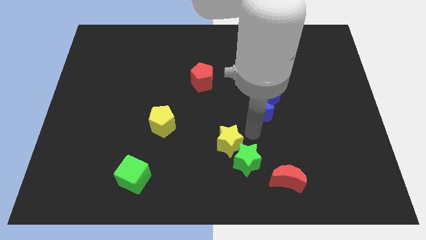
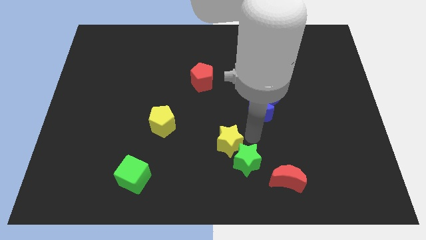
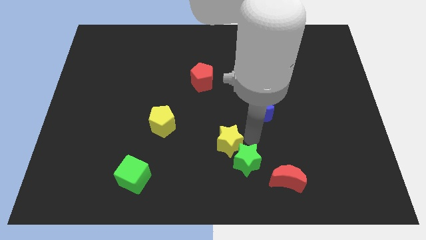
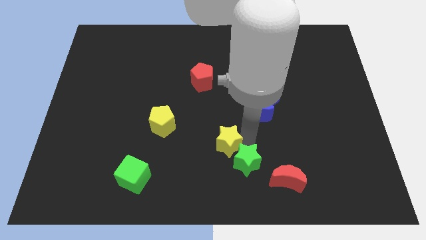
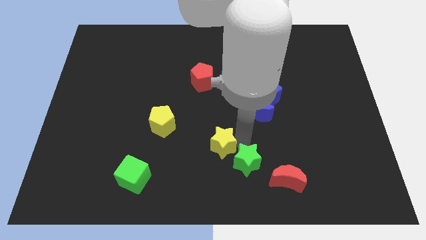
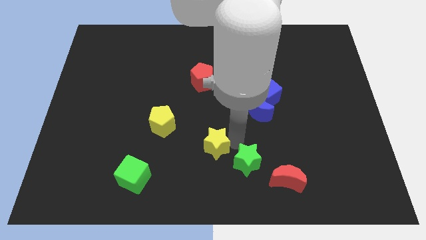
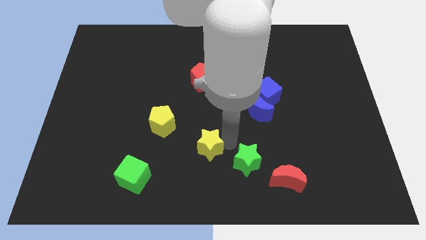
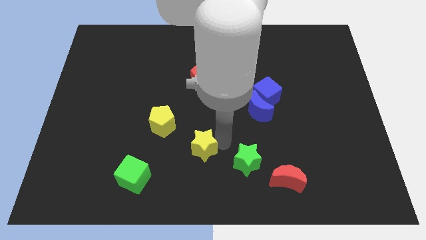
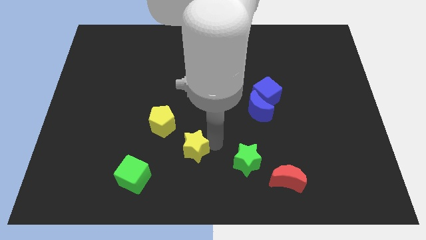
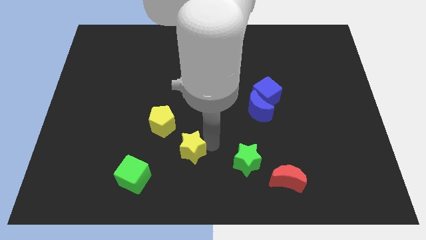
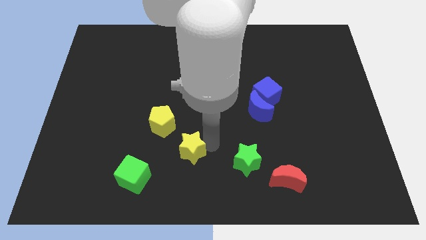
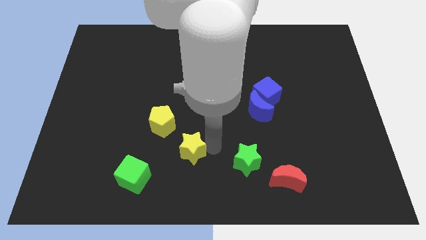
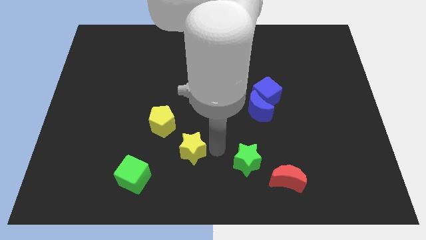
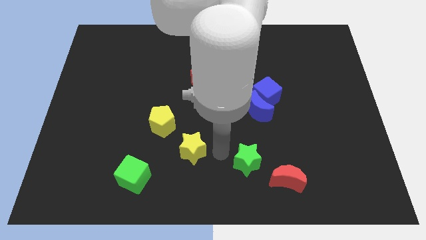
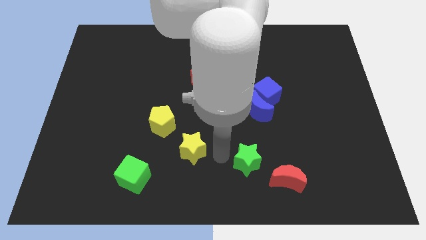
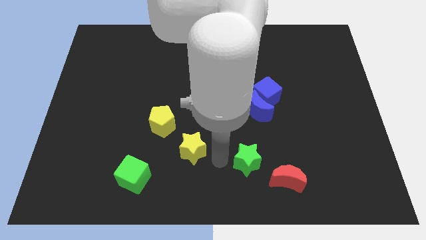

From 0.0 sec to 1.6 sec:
separate the yellow star from the green star

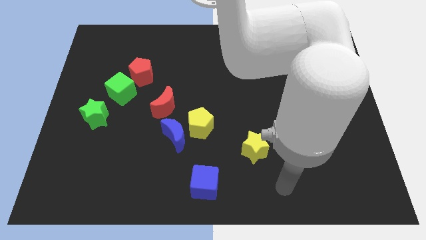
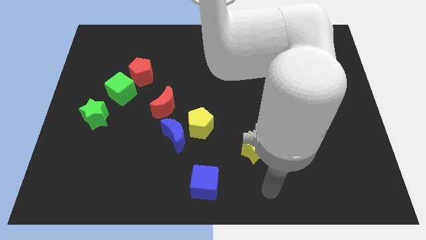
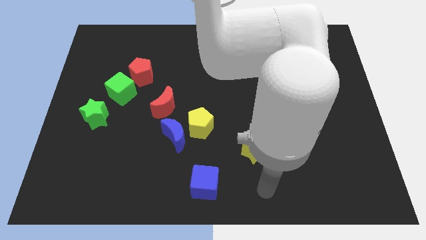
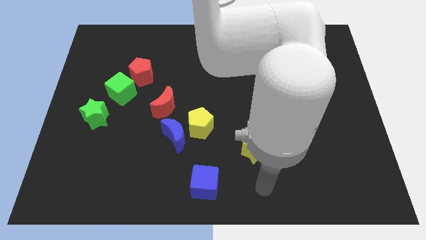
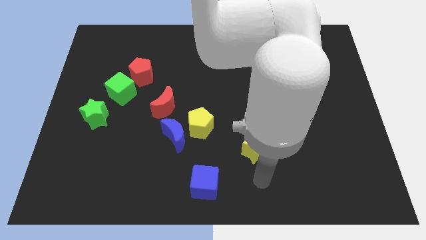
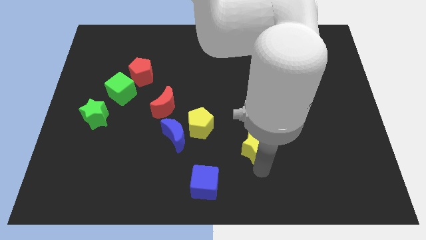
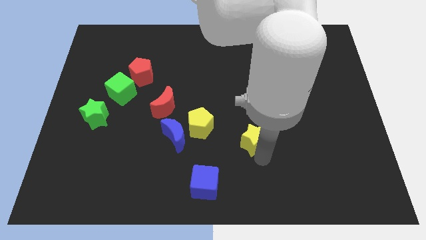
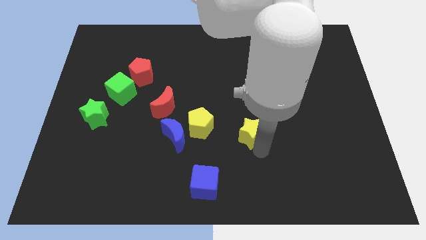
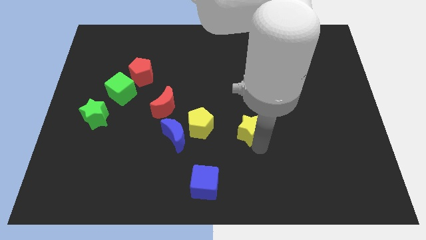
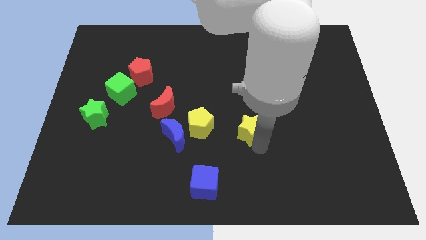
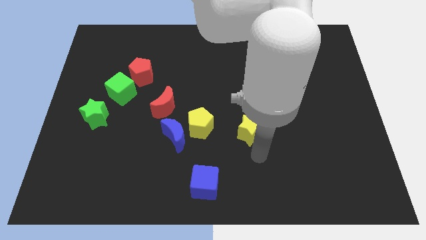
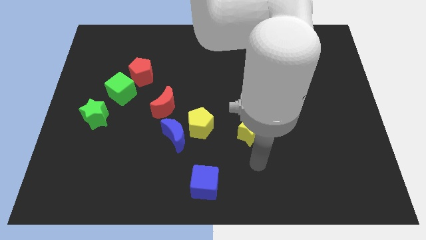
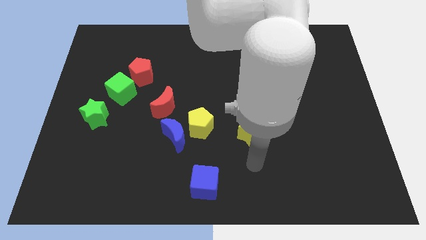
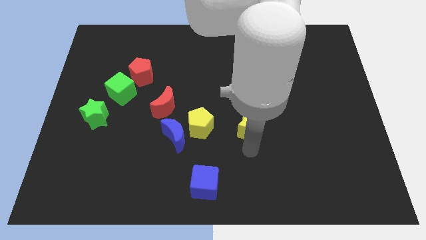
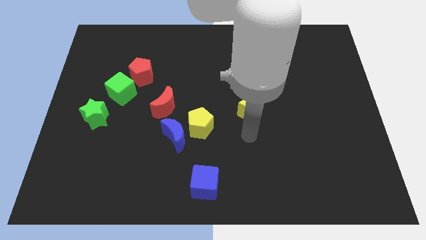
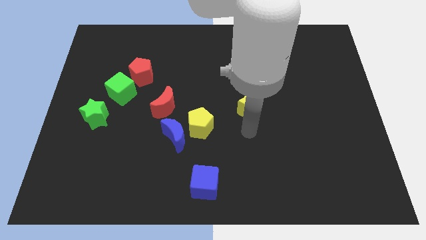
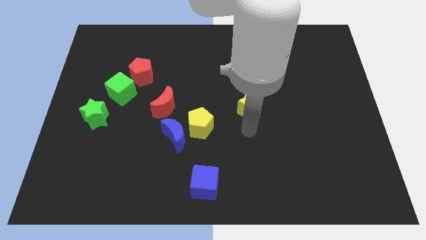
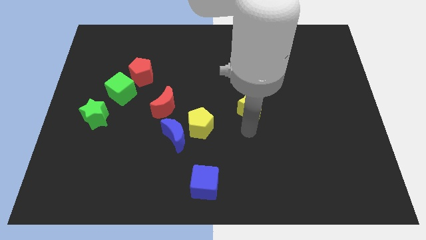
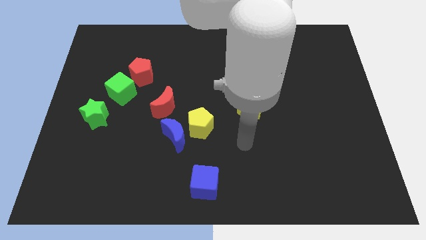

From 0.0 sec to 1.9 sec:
push the yellow star slightly upwards

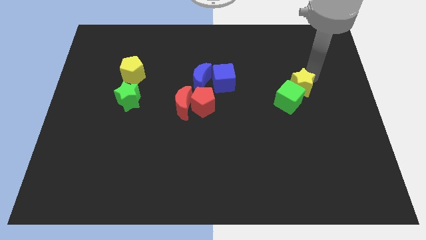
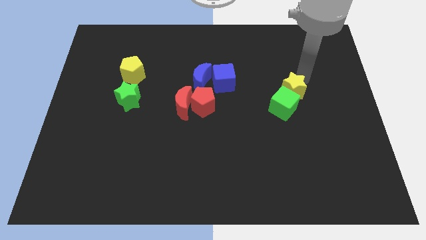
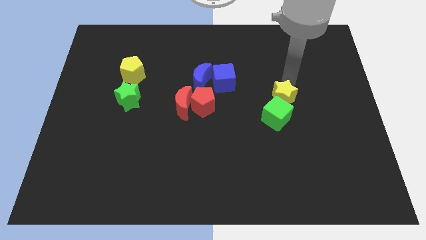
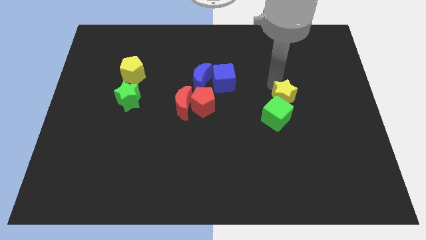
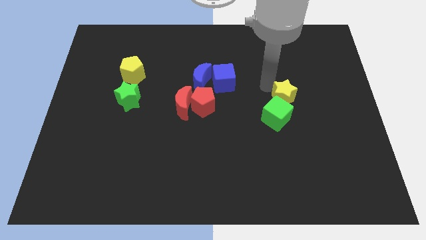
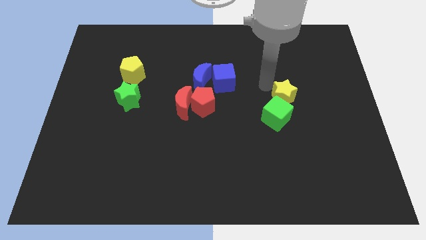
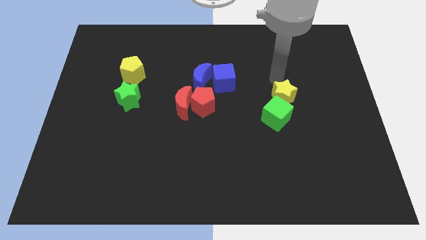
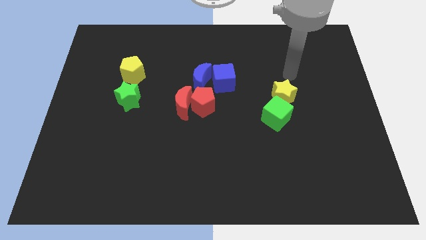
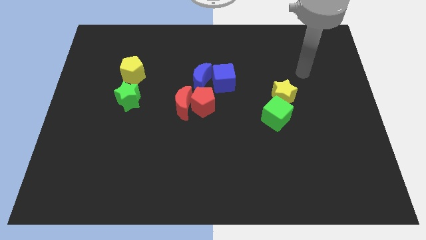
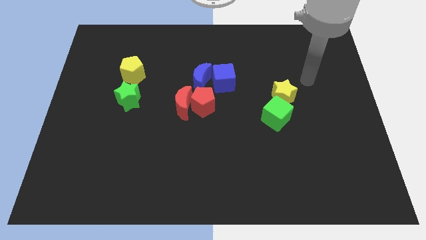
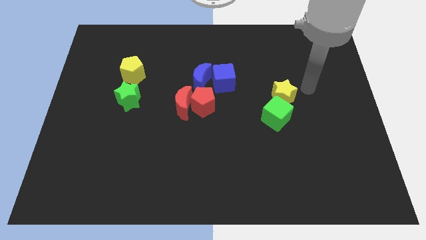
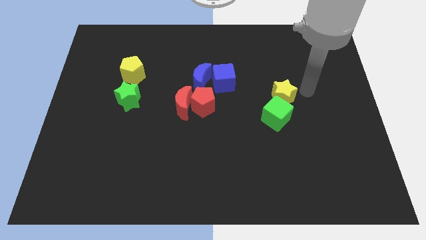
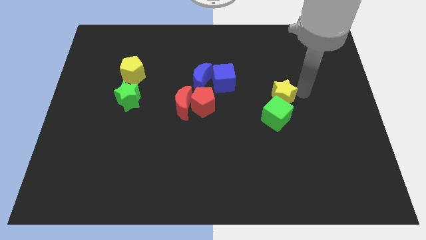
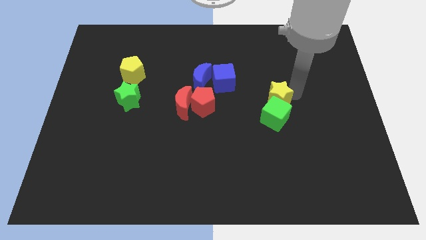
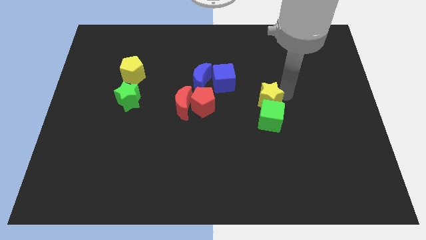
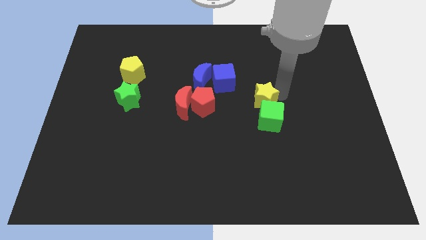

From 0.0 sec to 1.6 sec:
push the yellow star along green cube towards the bottom

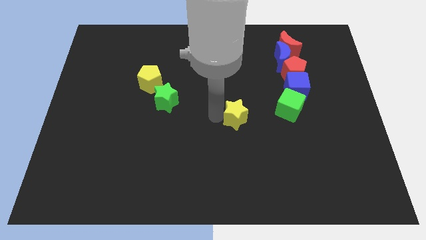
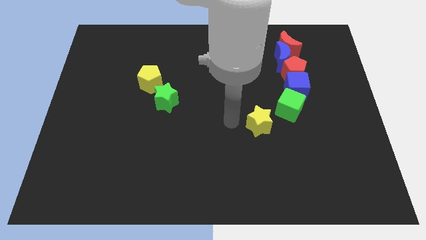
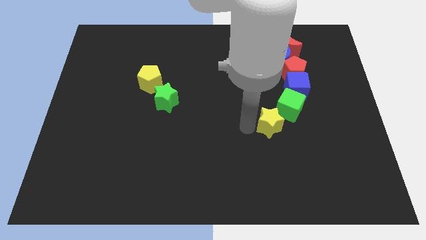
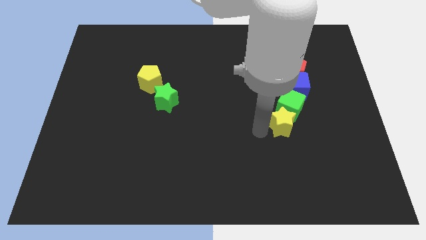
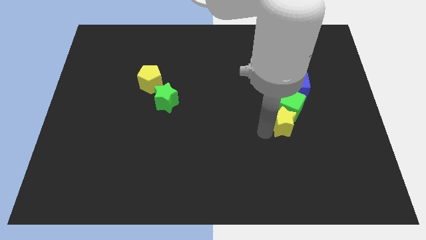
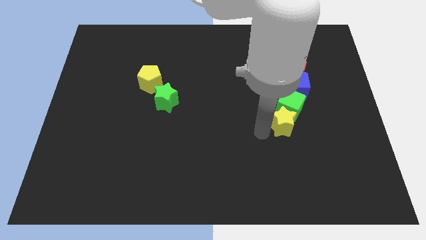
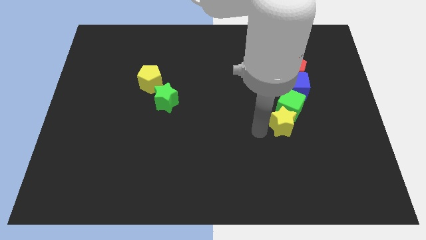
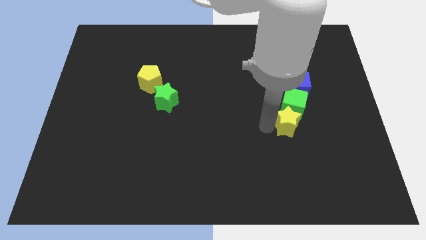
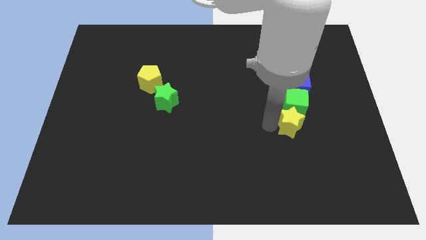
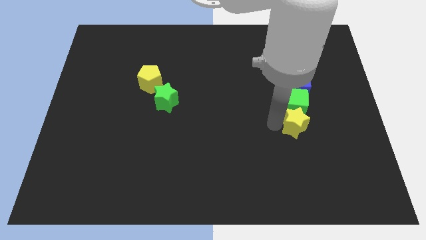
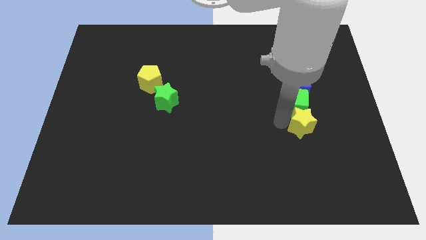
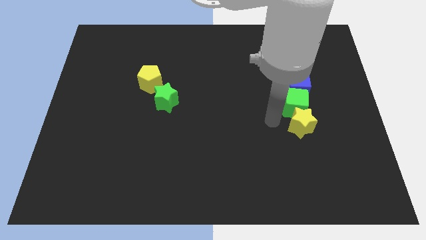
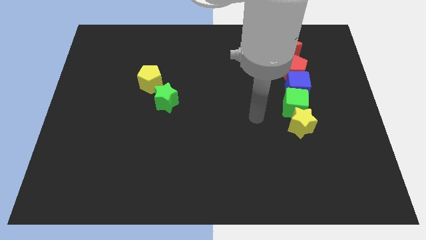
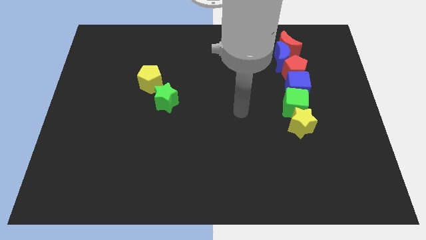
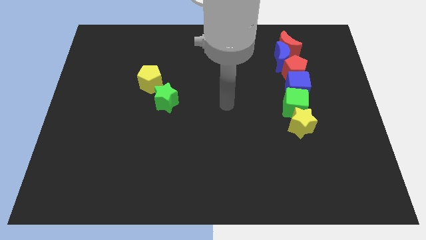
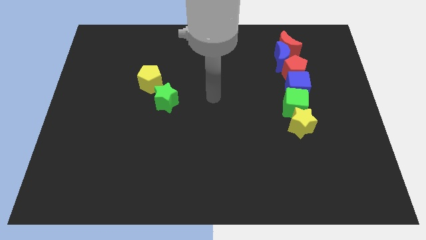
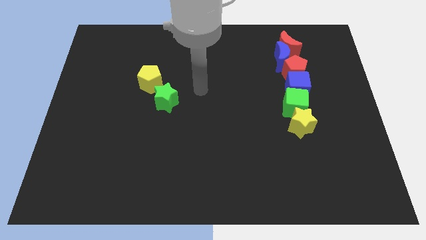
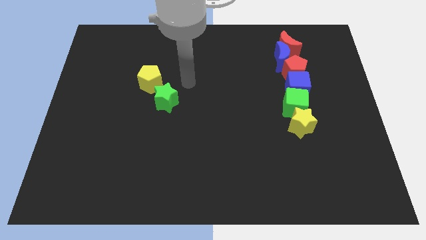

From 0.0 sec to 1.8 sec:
move the yellow star to the bottom of the green cube

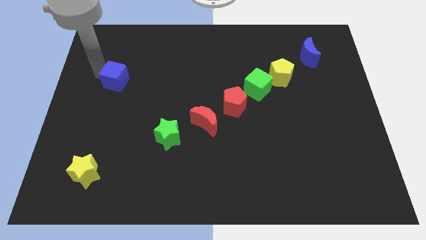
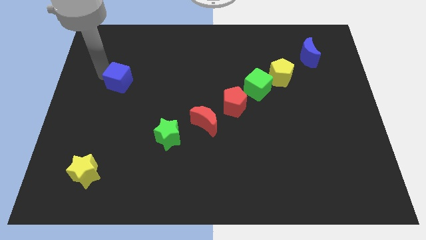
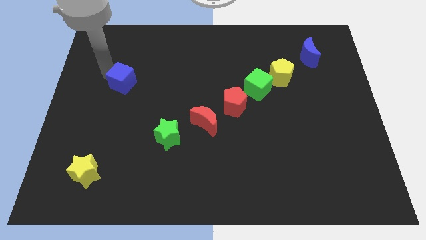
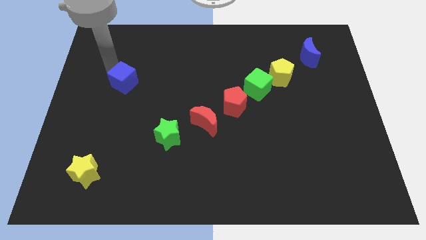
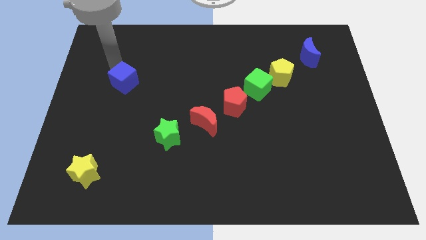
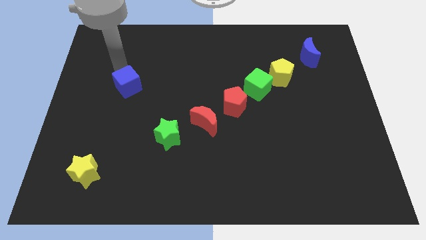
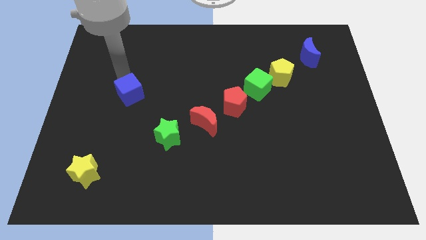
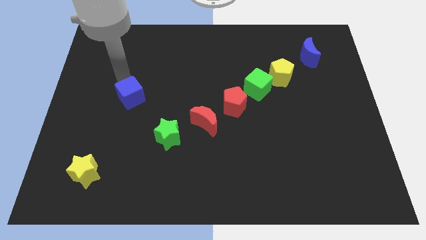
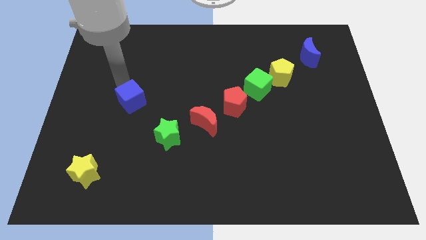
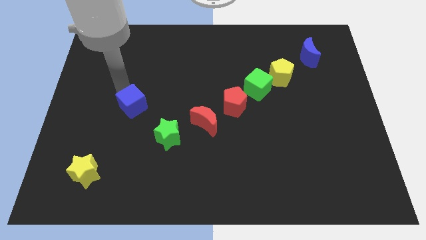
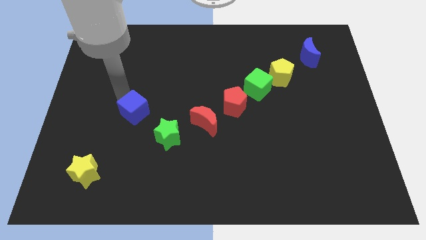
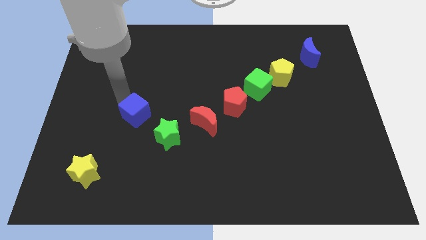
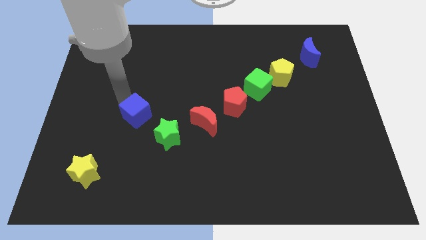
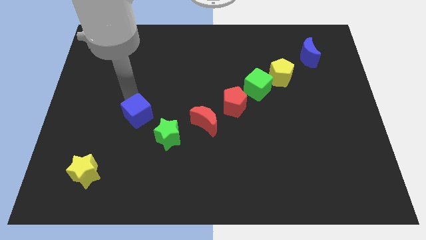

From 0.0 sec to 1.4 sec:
place the blue cube diagonally above the green star

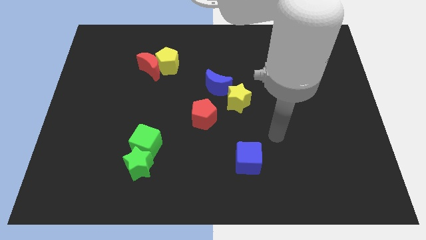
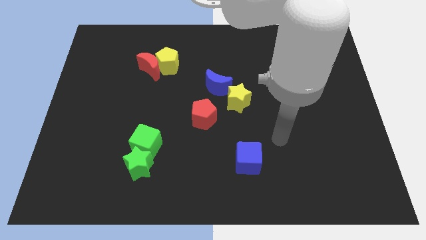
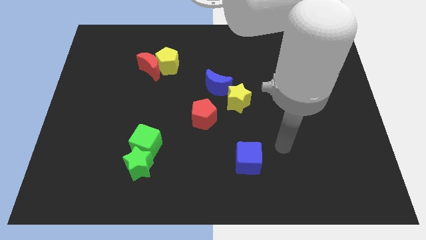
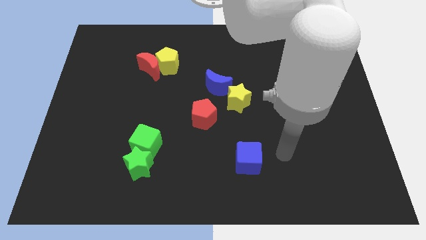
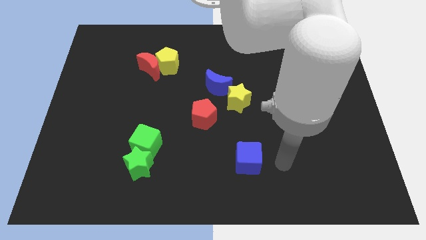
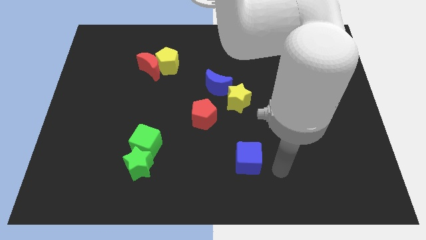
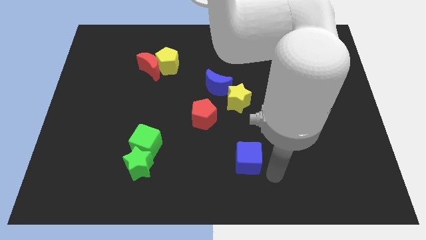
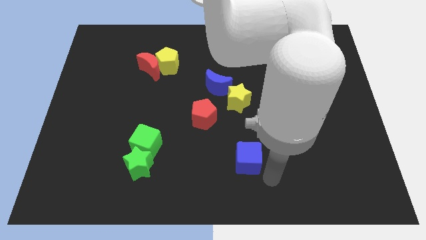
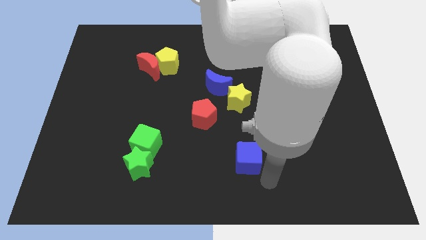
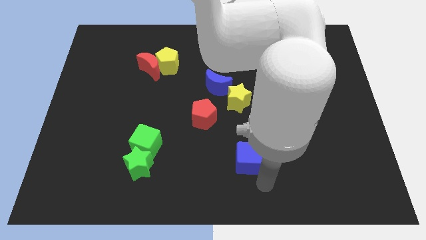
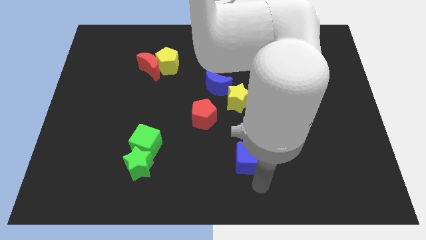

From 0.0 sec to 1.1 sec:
slide your arm below the blue cube
